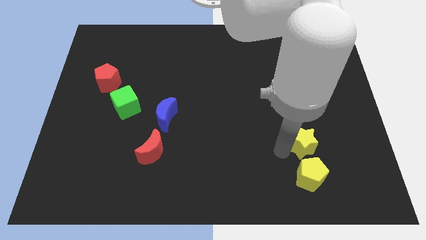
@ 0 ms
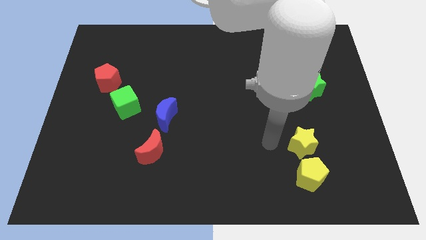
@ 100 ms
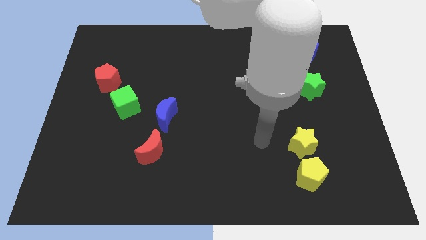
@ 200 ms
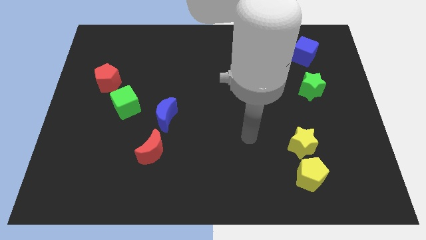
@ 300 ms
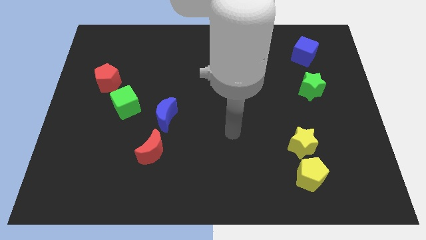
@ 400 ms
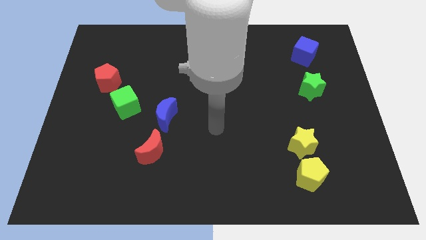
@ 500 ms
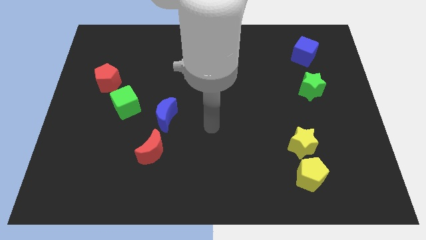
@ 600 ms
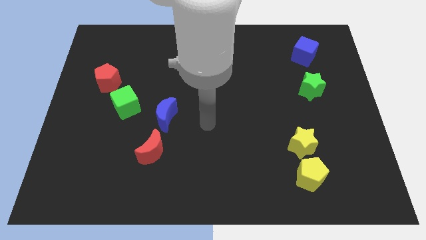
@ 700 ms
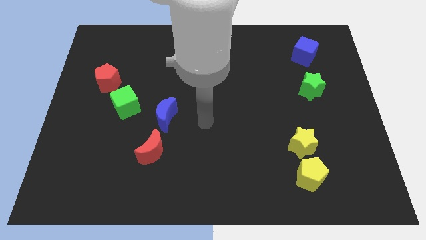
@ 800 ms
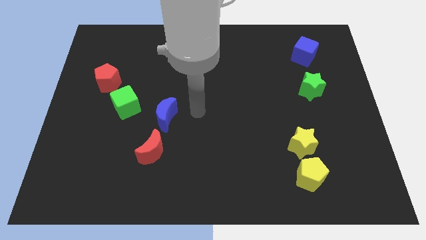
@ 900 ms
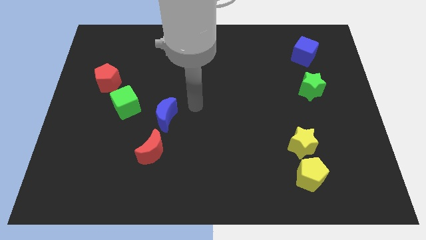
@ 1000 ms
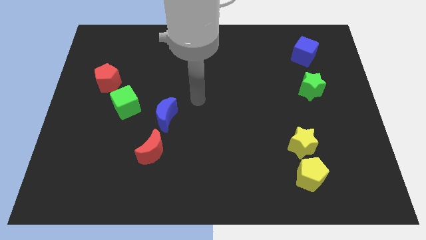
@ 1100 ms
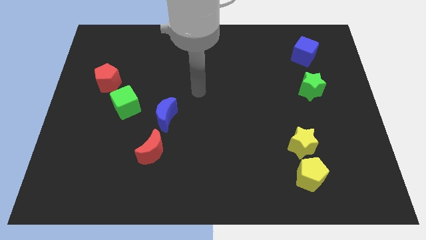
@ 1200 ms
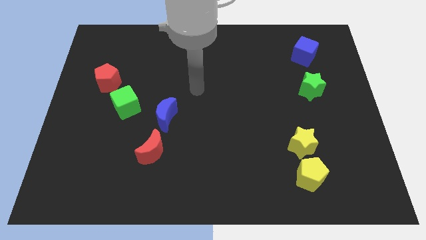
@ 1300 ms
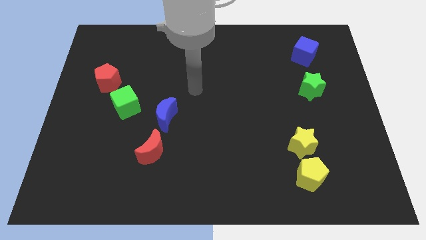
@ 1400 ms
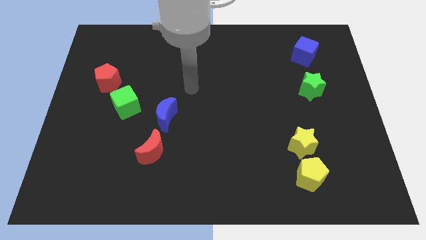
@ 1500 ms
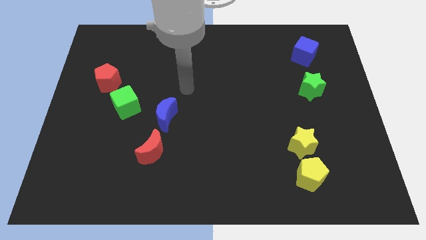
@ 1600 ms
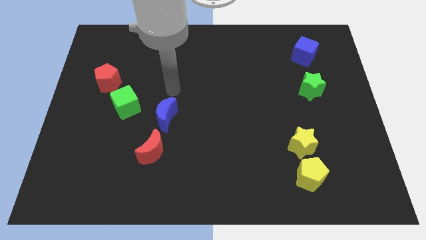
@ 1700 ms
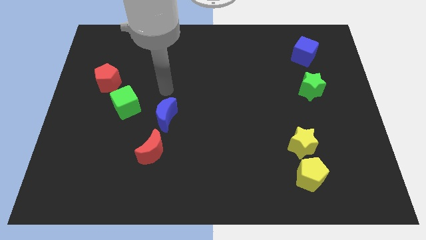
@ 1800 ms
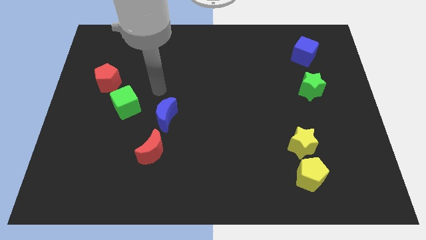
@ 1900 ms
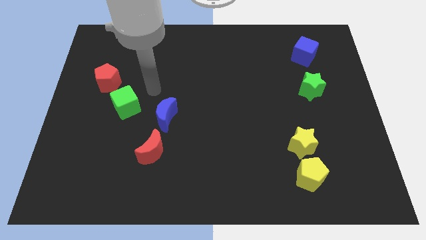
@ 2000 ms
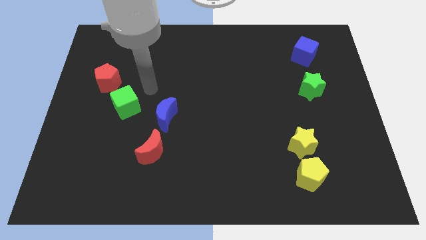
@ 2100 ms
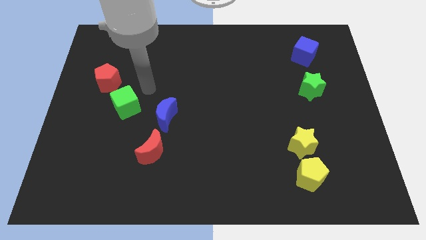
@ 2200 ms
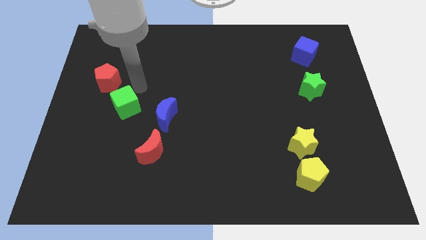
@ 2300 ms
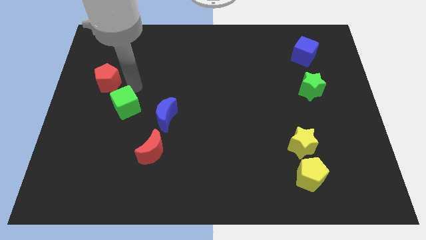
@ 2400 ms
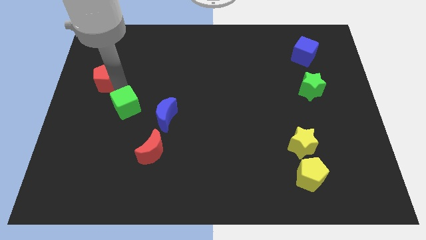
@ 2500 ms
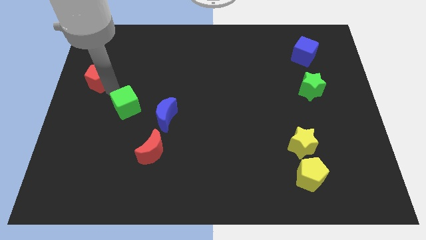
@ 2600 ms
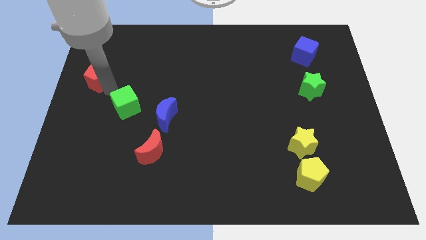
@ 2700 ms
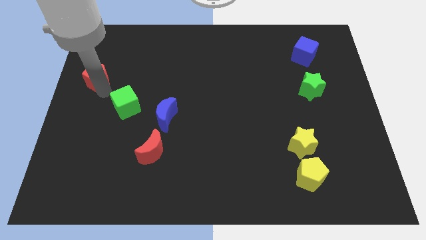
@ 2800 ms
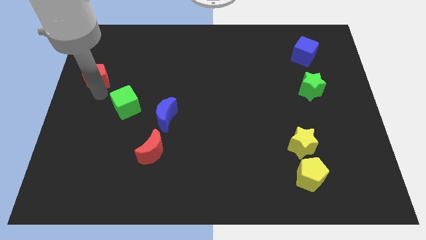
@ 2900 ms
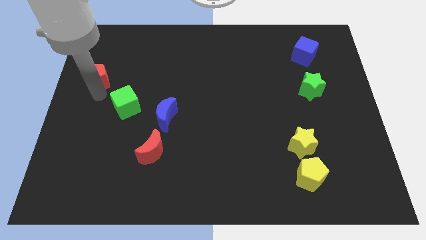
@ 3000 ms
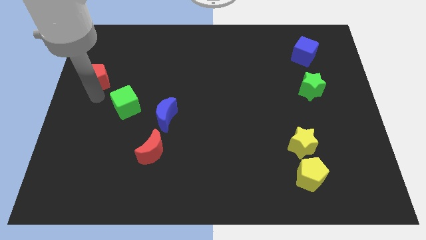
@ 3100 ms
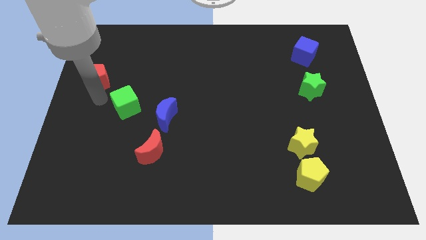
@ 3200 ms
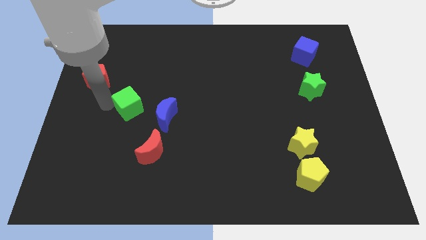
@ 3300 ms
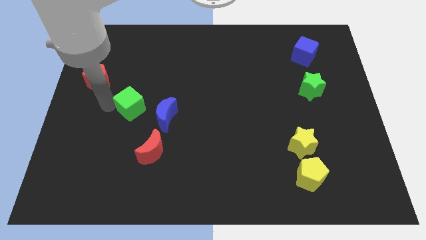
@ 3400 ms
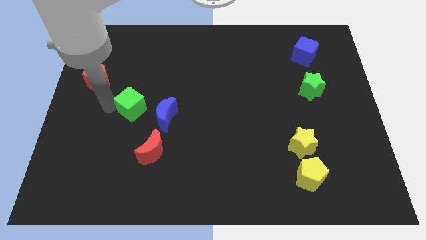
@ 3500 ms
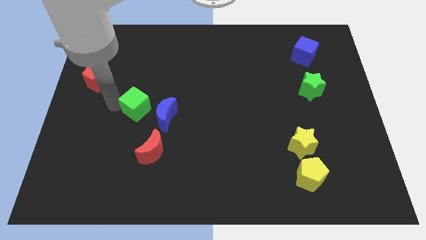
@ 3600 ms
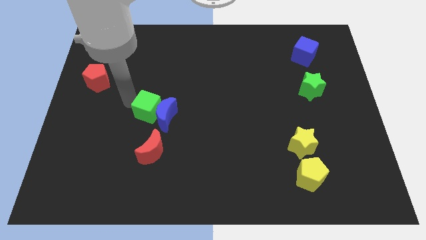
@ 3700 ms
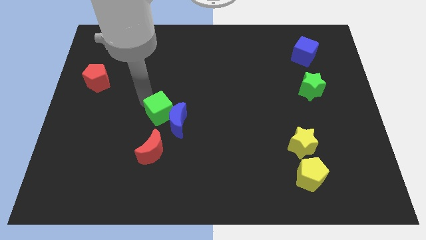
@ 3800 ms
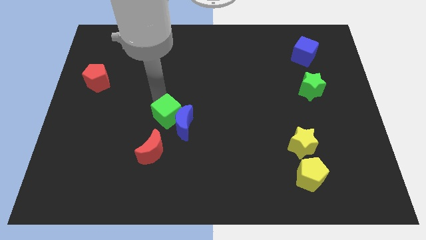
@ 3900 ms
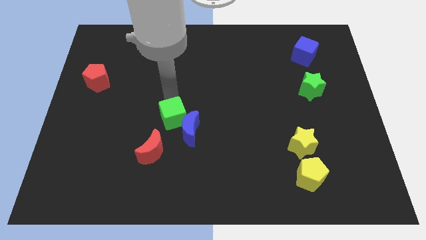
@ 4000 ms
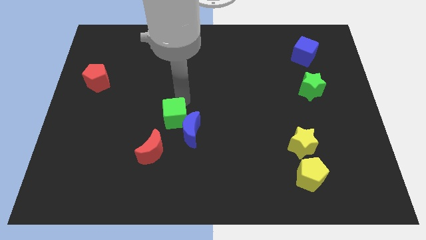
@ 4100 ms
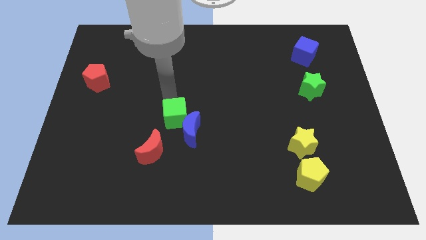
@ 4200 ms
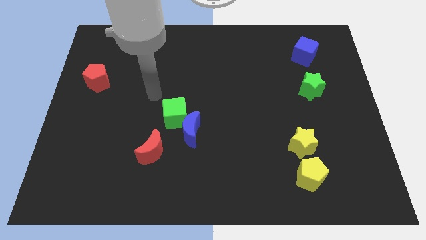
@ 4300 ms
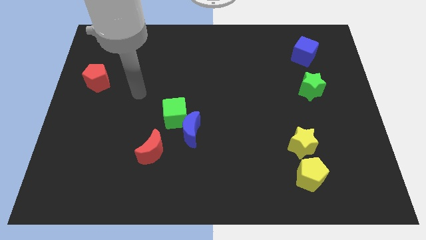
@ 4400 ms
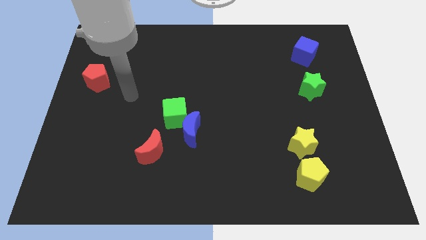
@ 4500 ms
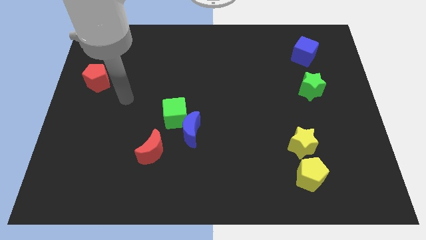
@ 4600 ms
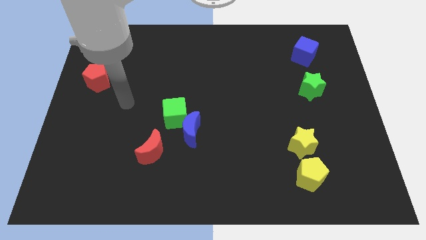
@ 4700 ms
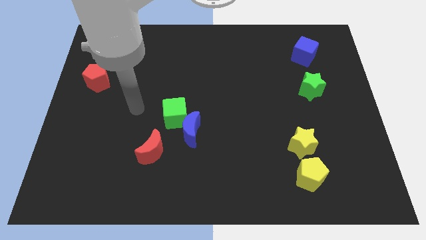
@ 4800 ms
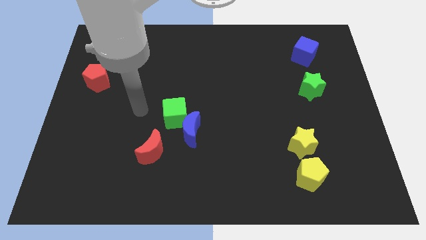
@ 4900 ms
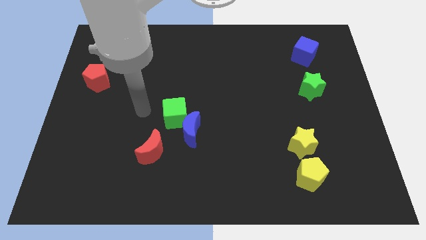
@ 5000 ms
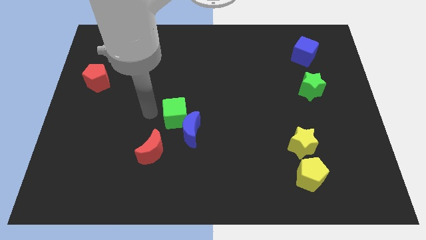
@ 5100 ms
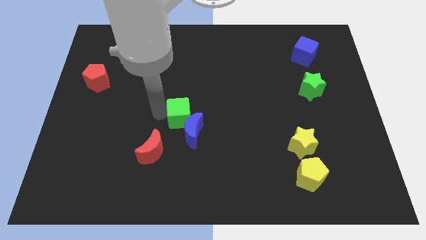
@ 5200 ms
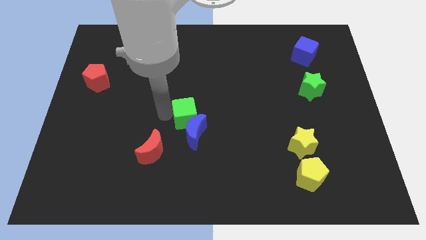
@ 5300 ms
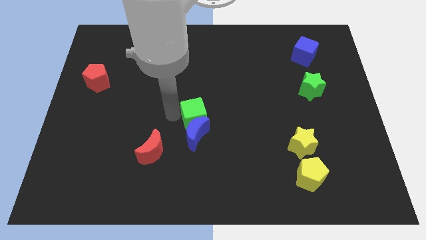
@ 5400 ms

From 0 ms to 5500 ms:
push the green cube into the blue moon

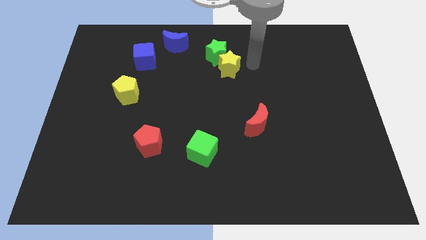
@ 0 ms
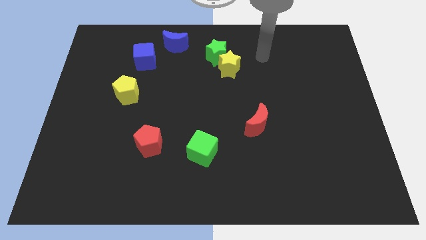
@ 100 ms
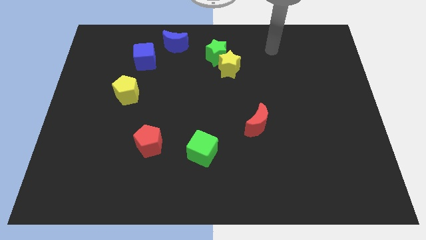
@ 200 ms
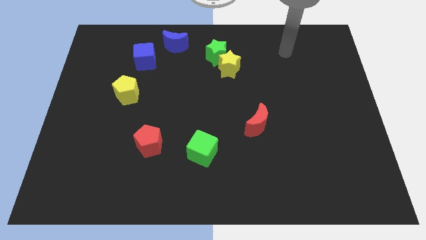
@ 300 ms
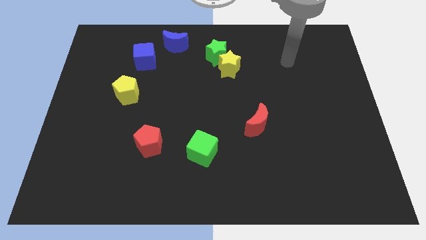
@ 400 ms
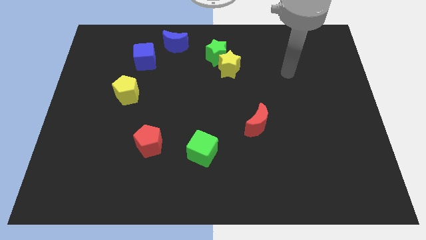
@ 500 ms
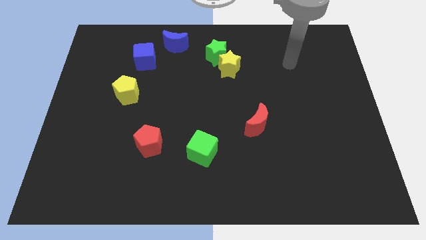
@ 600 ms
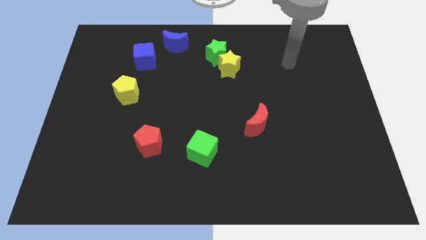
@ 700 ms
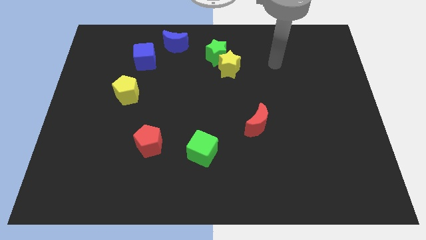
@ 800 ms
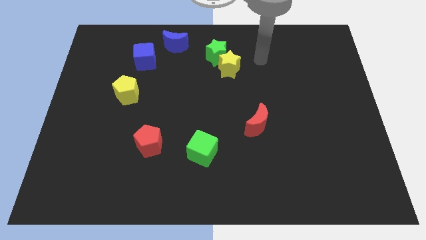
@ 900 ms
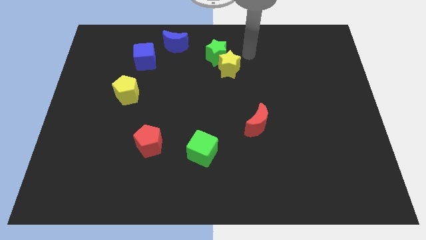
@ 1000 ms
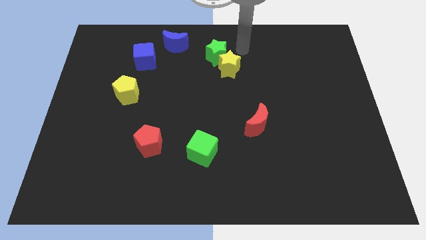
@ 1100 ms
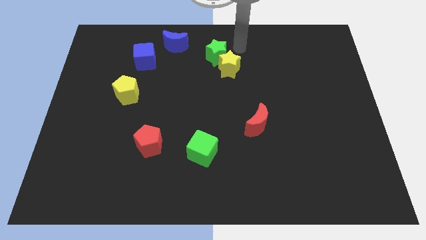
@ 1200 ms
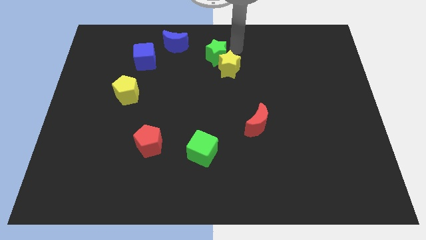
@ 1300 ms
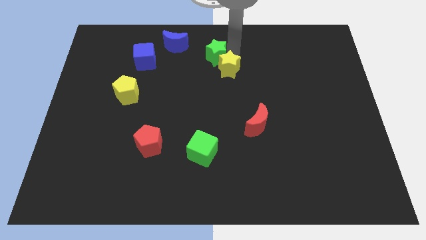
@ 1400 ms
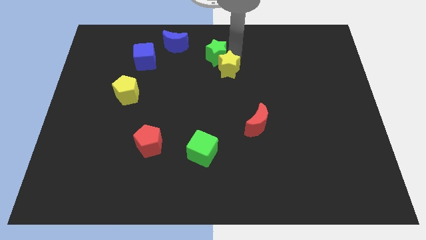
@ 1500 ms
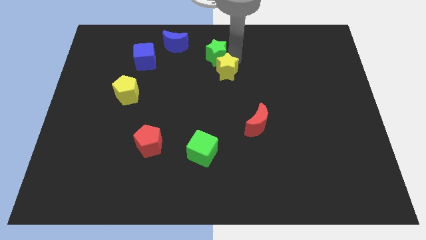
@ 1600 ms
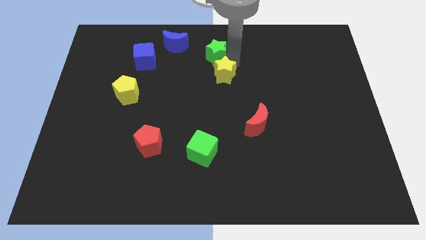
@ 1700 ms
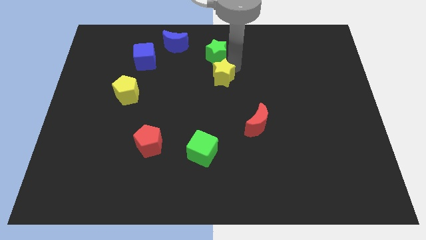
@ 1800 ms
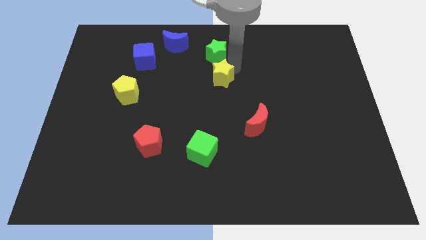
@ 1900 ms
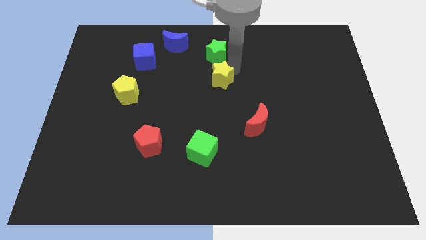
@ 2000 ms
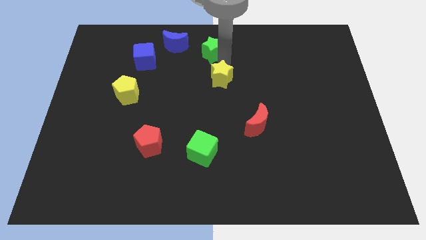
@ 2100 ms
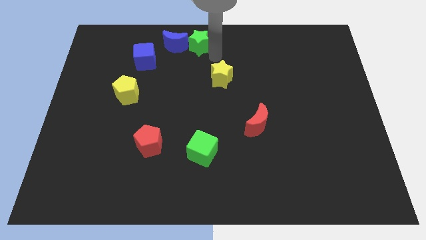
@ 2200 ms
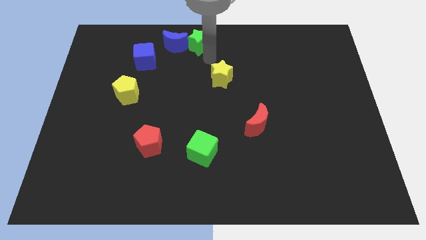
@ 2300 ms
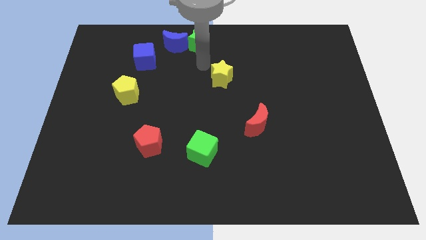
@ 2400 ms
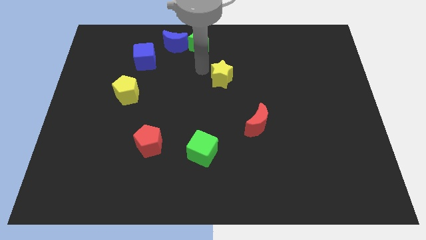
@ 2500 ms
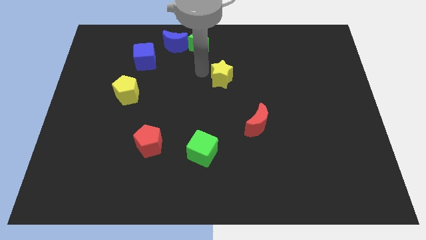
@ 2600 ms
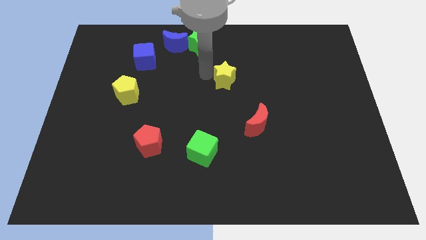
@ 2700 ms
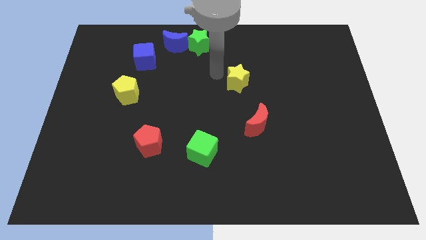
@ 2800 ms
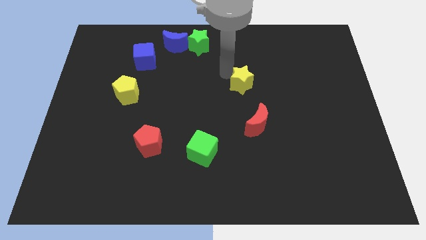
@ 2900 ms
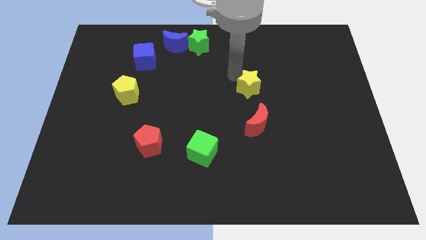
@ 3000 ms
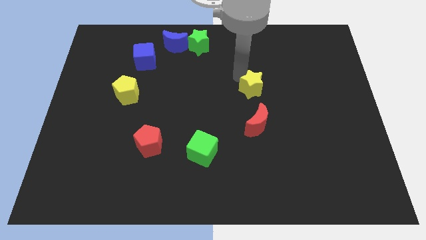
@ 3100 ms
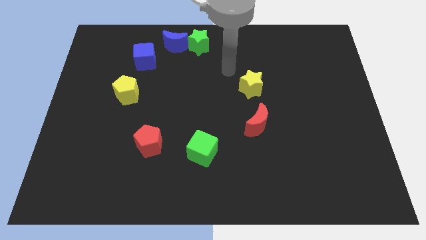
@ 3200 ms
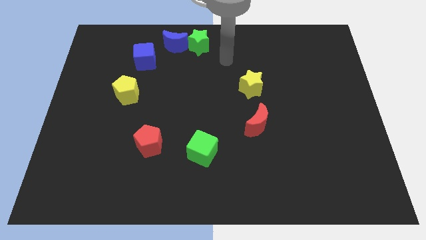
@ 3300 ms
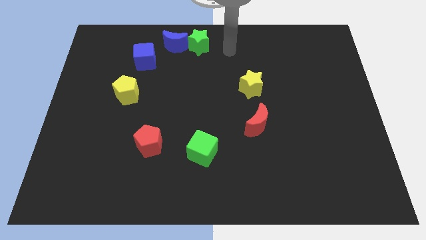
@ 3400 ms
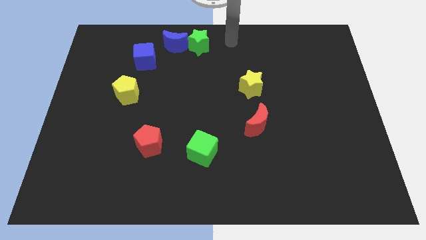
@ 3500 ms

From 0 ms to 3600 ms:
push the yellow star towards the top to the red crescent

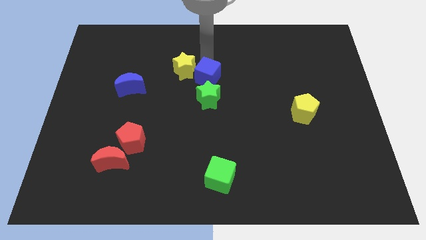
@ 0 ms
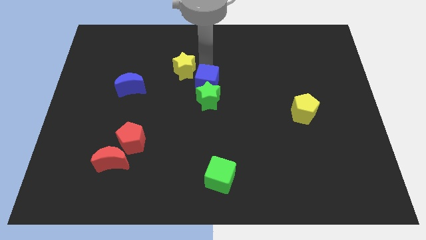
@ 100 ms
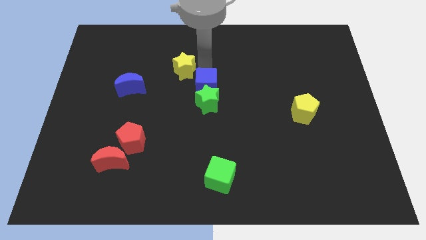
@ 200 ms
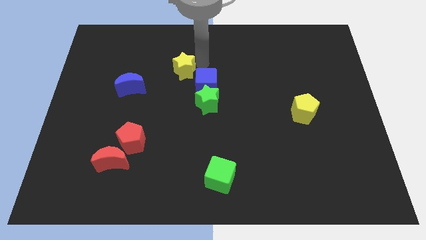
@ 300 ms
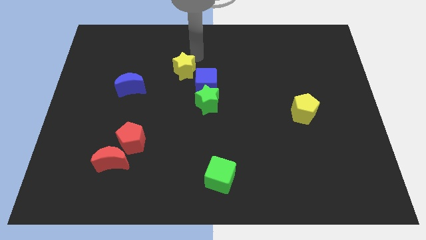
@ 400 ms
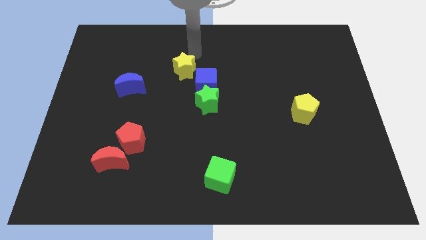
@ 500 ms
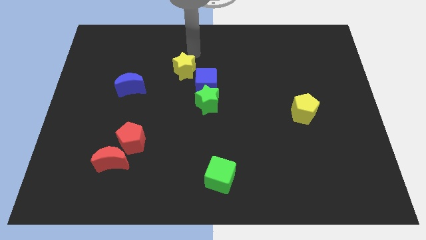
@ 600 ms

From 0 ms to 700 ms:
push blue cube slightly down
